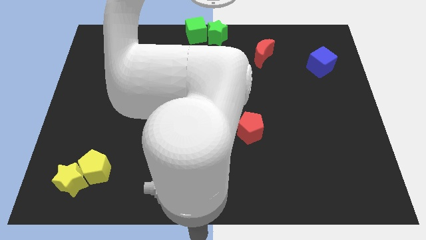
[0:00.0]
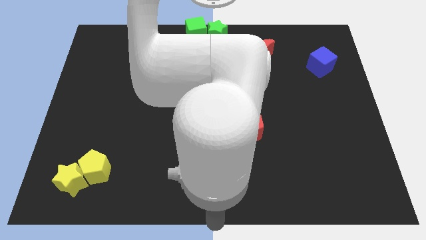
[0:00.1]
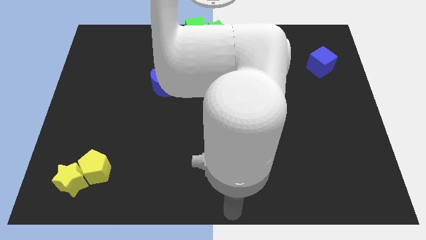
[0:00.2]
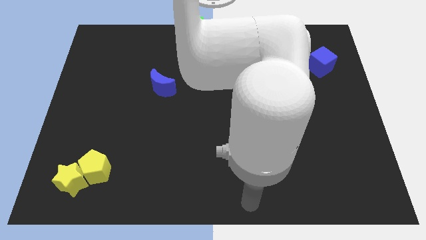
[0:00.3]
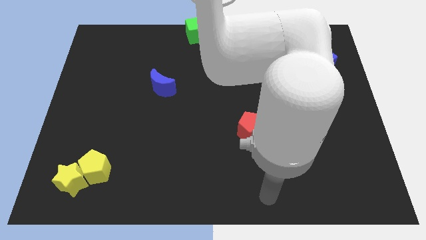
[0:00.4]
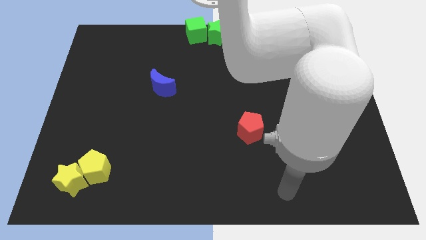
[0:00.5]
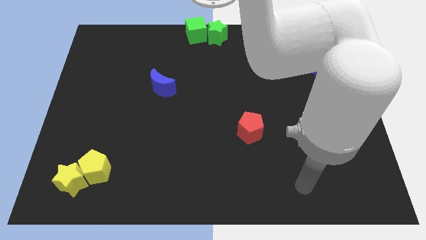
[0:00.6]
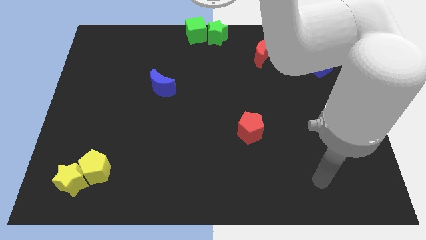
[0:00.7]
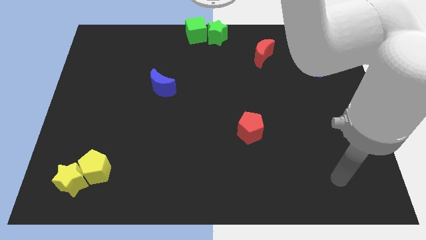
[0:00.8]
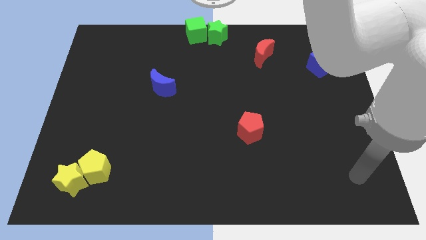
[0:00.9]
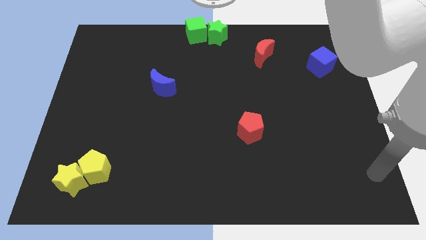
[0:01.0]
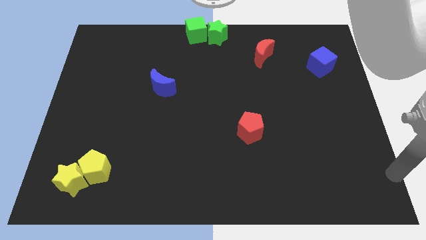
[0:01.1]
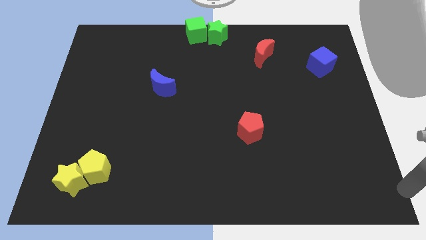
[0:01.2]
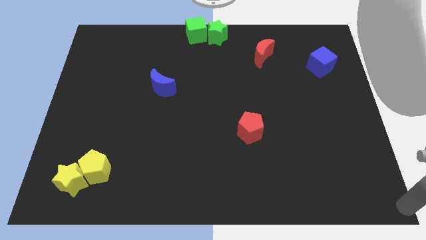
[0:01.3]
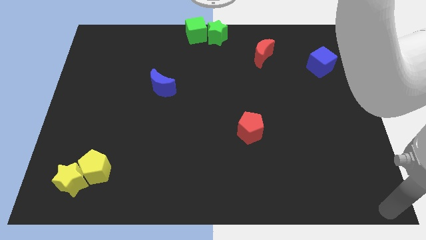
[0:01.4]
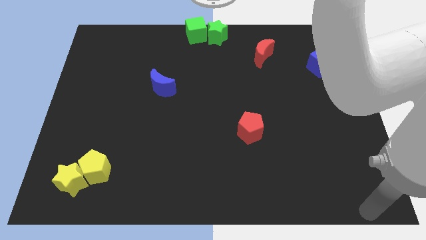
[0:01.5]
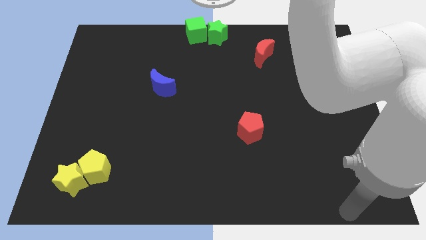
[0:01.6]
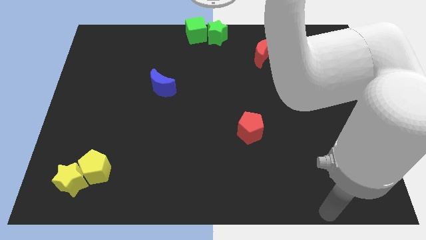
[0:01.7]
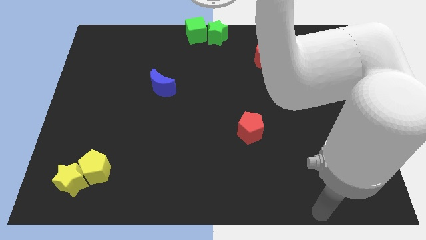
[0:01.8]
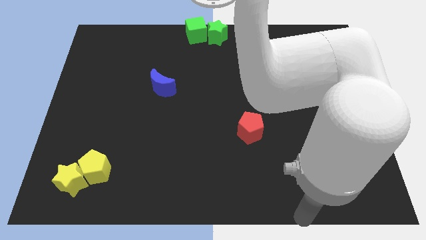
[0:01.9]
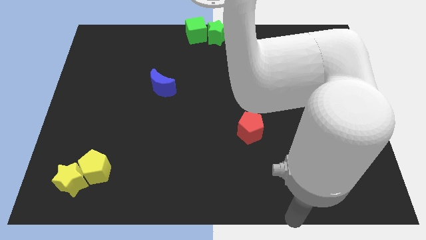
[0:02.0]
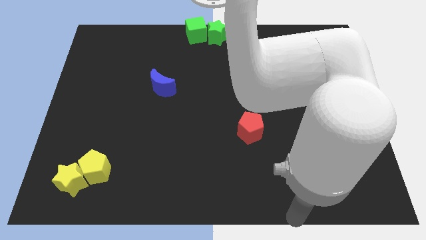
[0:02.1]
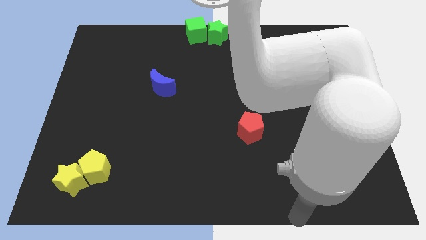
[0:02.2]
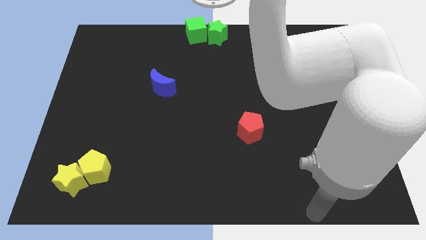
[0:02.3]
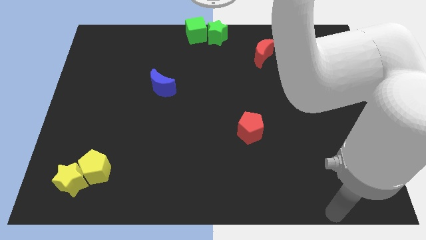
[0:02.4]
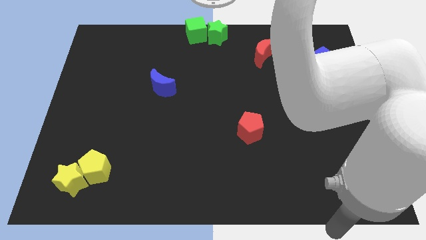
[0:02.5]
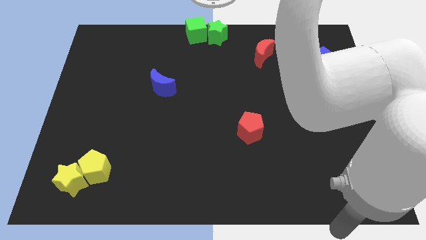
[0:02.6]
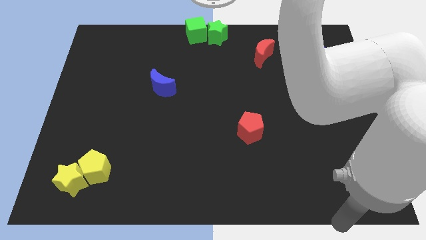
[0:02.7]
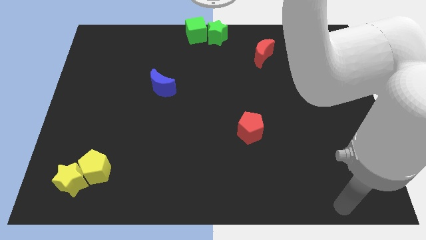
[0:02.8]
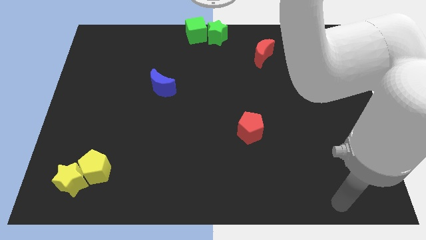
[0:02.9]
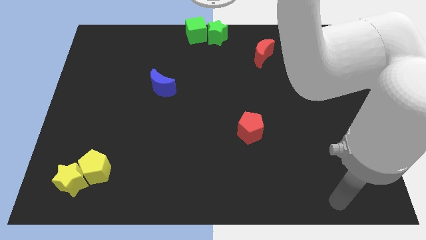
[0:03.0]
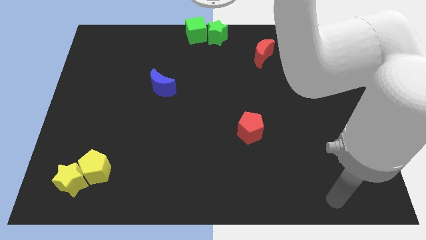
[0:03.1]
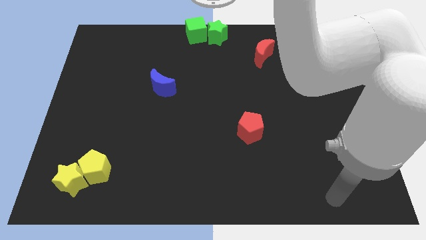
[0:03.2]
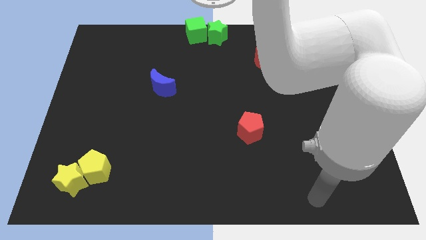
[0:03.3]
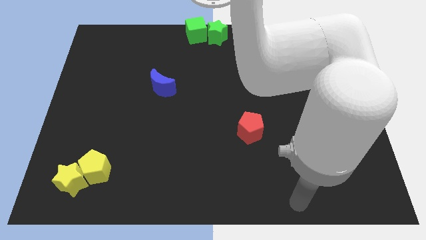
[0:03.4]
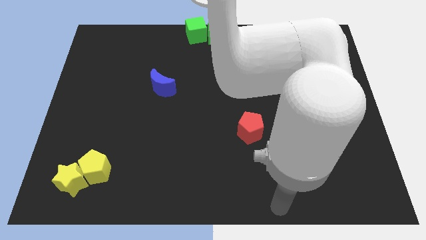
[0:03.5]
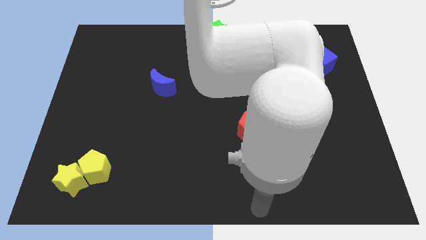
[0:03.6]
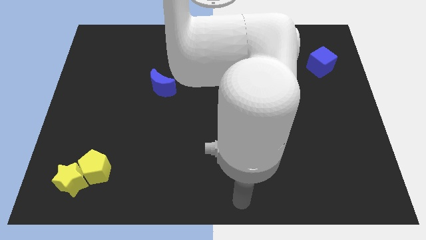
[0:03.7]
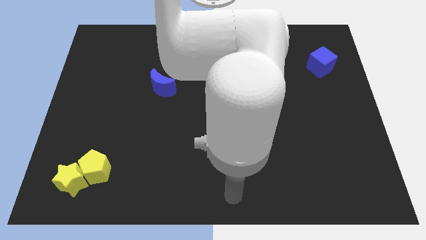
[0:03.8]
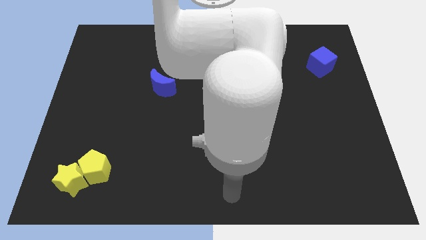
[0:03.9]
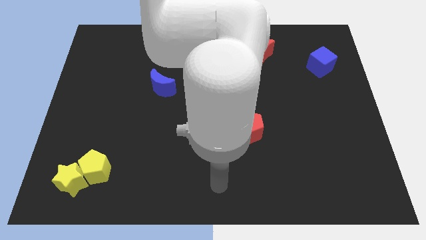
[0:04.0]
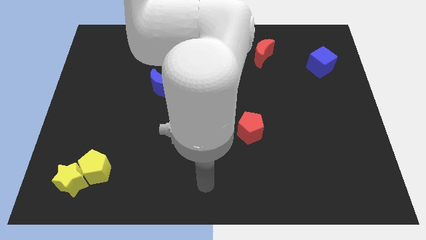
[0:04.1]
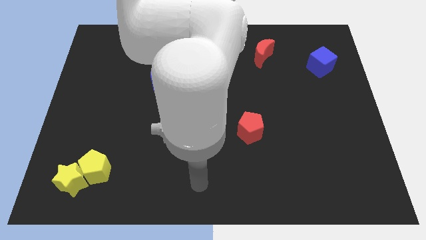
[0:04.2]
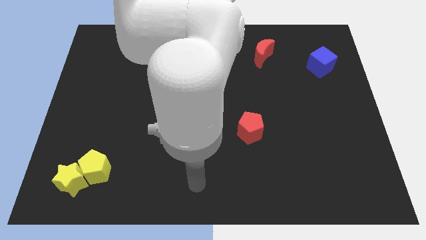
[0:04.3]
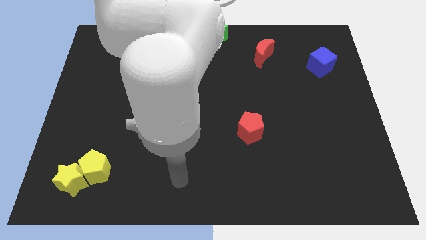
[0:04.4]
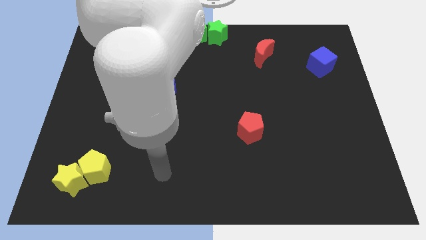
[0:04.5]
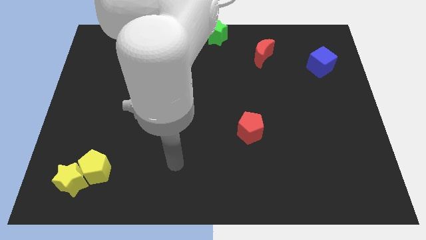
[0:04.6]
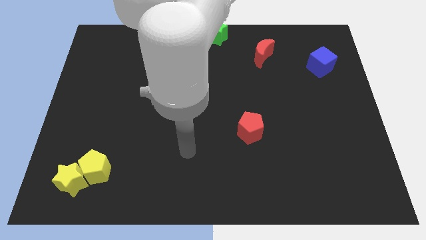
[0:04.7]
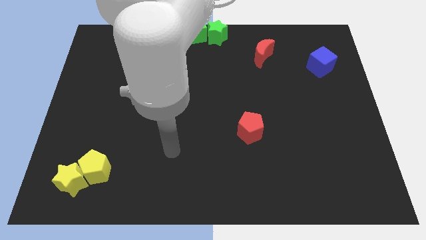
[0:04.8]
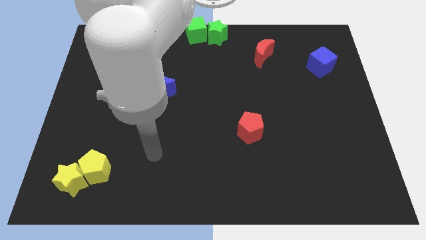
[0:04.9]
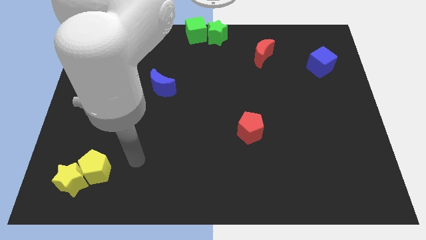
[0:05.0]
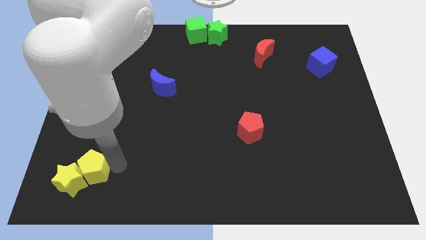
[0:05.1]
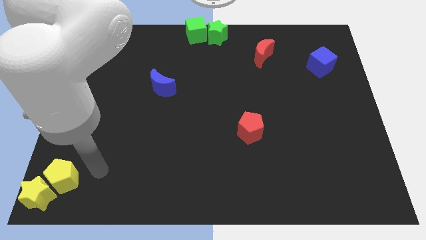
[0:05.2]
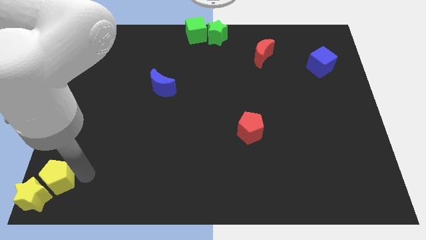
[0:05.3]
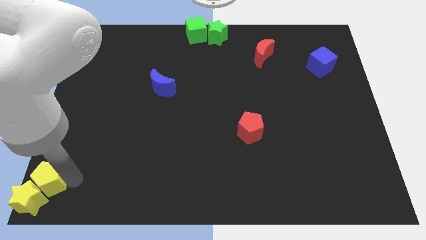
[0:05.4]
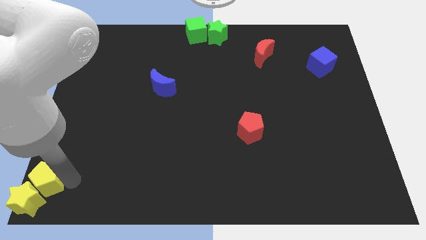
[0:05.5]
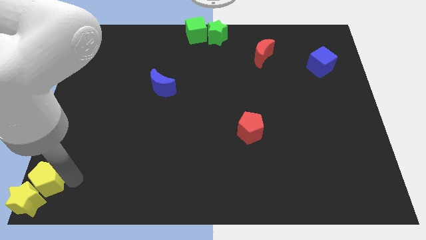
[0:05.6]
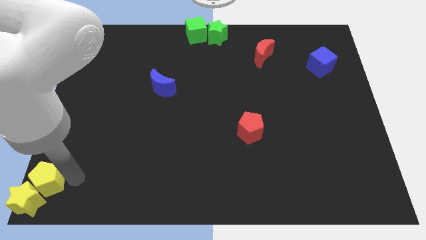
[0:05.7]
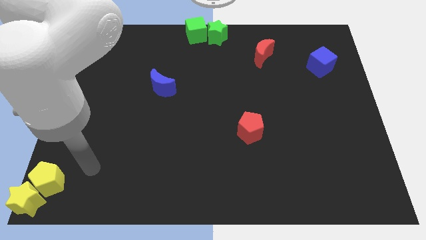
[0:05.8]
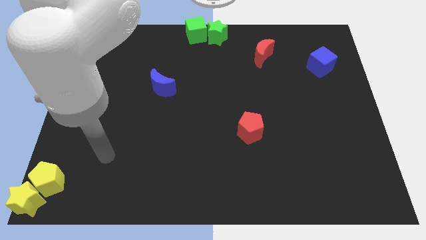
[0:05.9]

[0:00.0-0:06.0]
move the yellow pentagon with yellow star to the left bottom

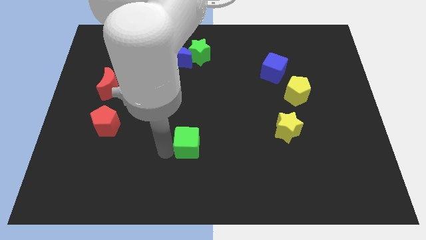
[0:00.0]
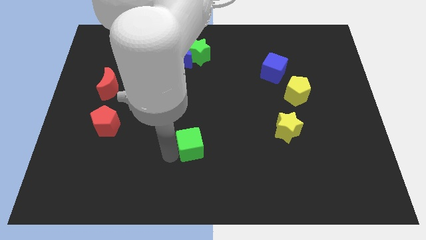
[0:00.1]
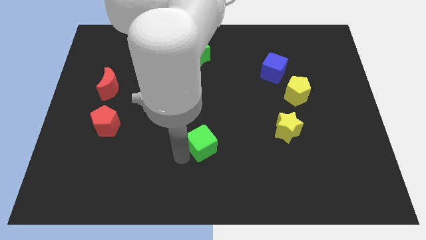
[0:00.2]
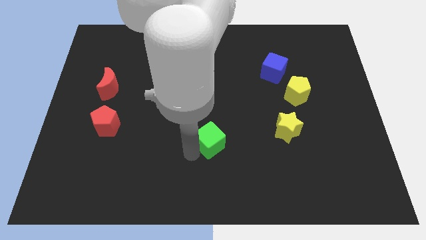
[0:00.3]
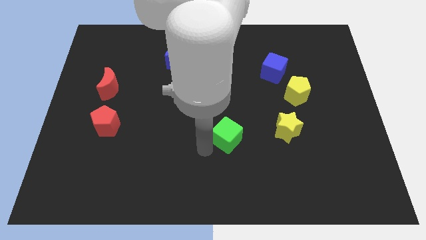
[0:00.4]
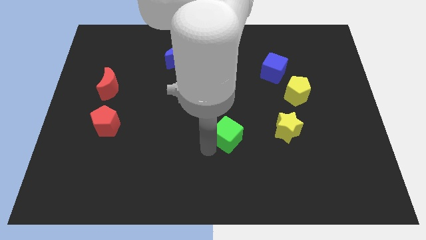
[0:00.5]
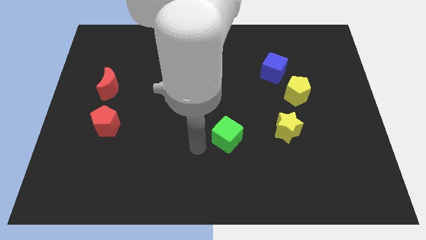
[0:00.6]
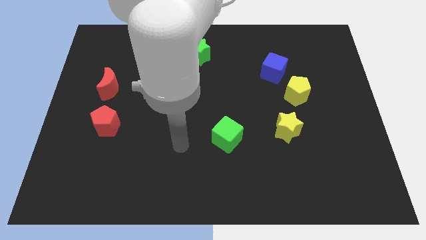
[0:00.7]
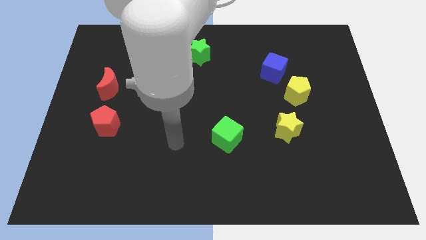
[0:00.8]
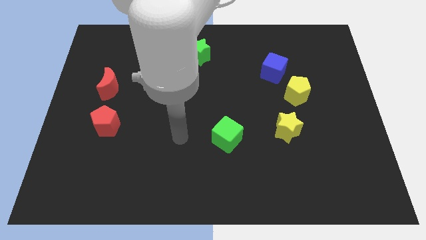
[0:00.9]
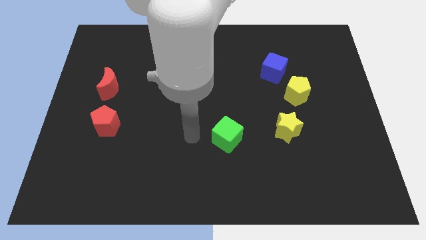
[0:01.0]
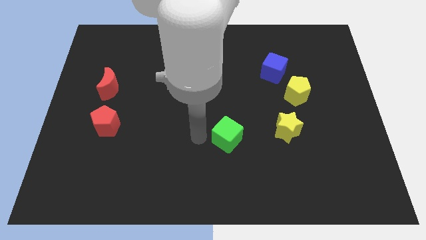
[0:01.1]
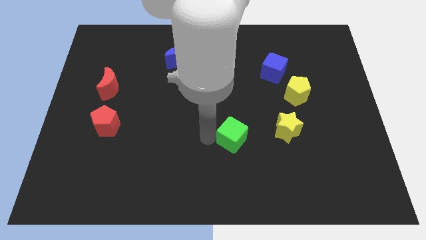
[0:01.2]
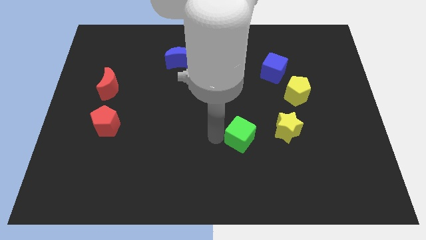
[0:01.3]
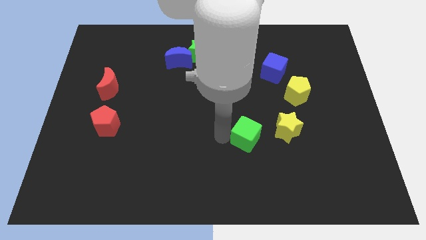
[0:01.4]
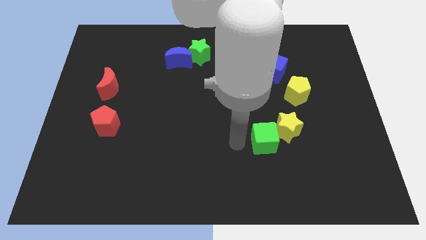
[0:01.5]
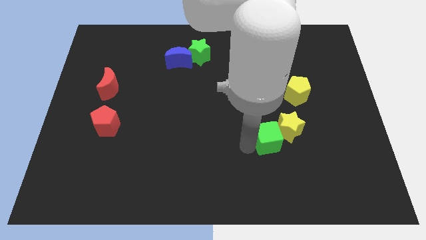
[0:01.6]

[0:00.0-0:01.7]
push the green cube into the left side of the yellow star

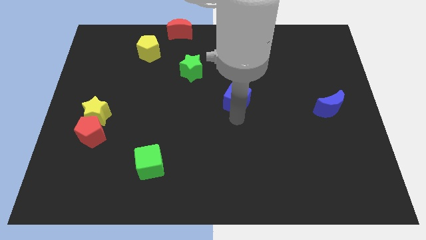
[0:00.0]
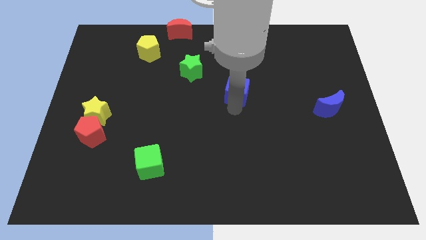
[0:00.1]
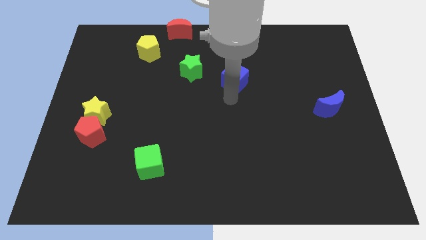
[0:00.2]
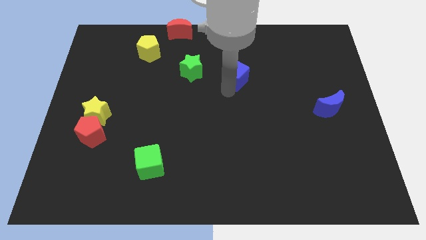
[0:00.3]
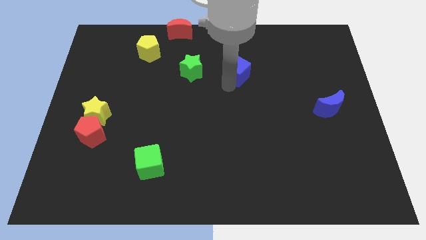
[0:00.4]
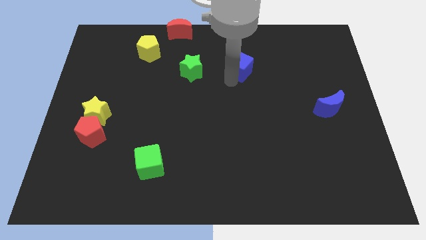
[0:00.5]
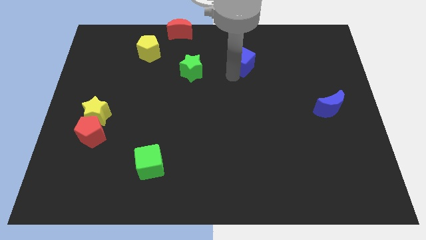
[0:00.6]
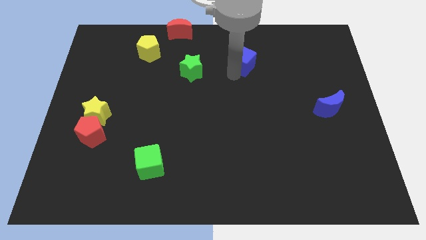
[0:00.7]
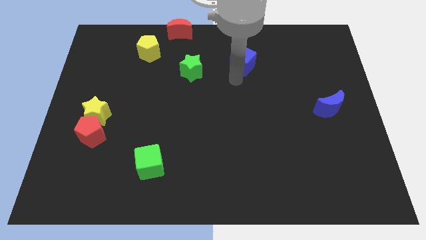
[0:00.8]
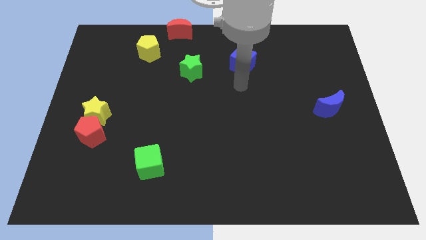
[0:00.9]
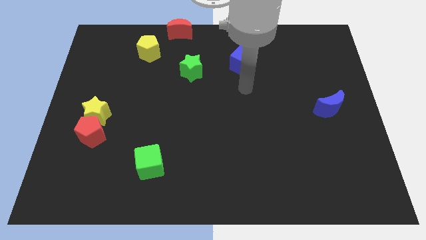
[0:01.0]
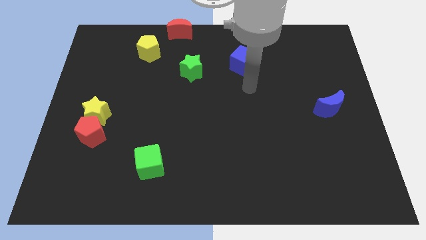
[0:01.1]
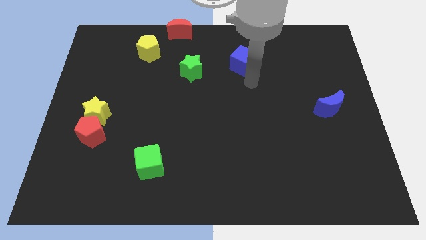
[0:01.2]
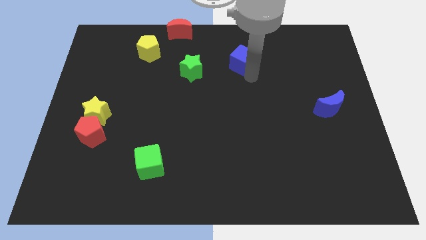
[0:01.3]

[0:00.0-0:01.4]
push the blue cube slightly upwards
